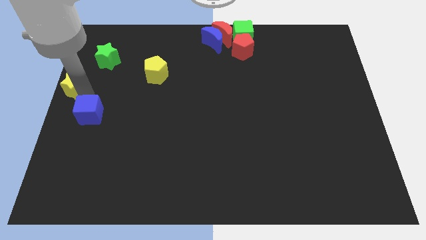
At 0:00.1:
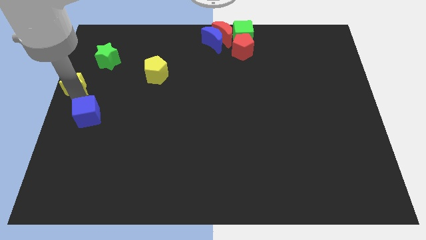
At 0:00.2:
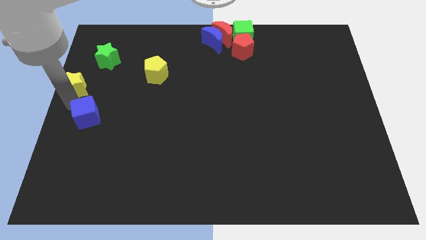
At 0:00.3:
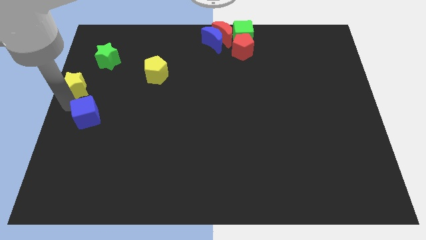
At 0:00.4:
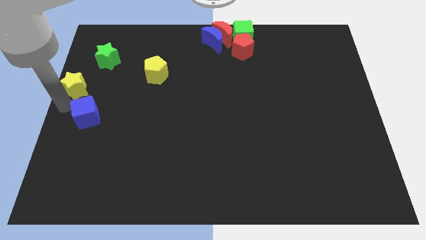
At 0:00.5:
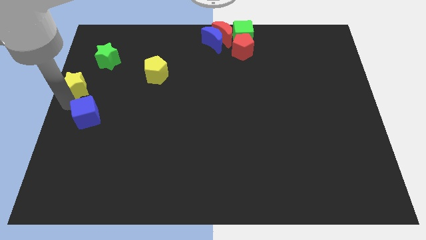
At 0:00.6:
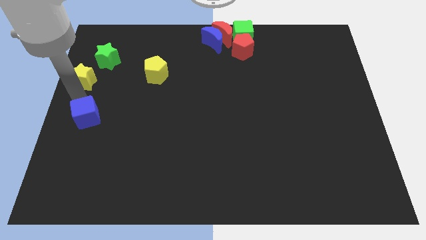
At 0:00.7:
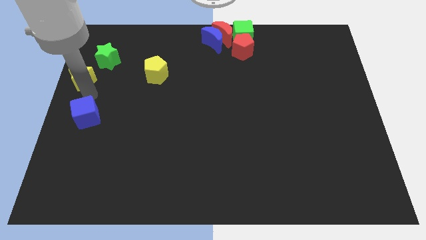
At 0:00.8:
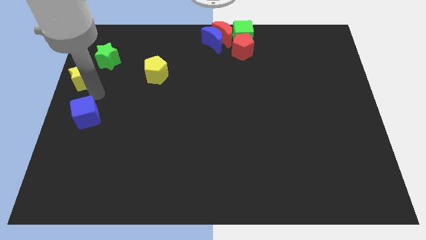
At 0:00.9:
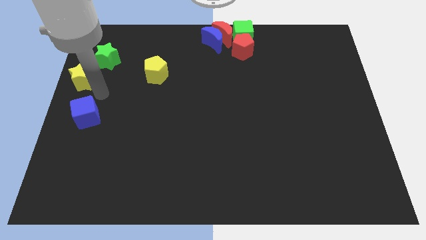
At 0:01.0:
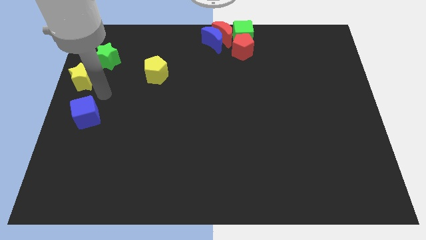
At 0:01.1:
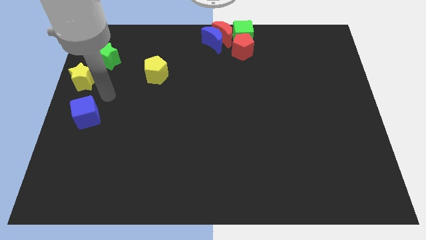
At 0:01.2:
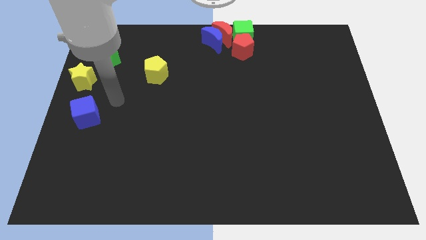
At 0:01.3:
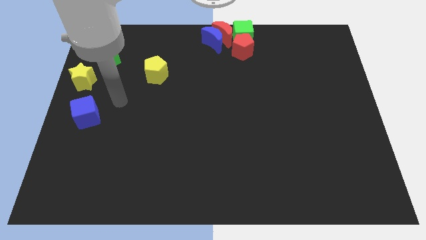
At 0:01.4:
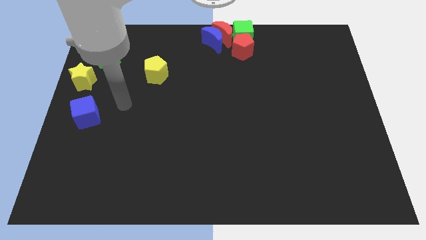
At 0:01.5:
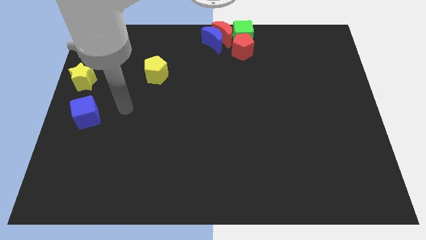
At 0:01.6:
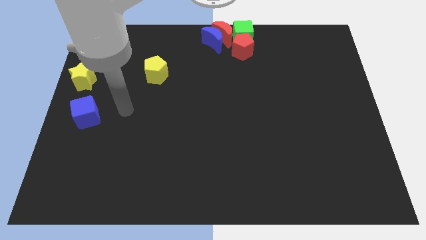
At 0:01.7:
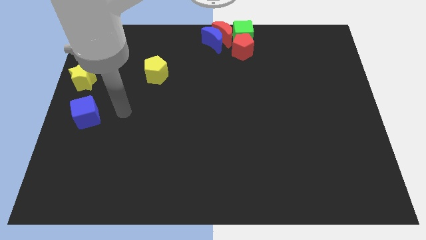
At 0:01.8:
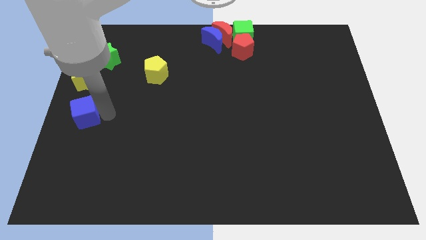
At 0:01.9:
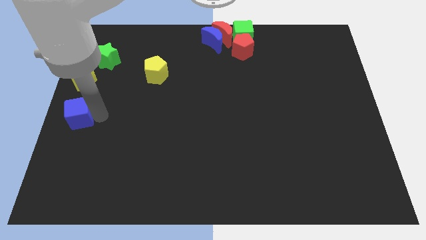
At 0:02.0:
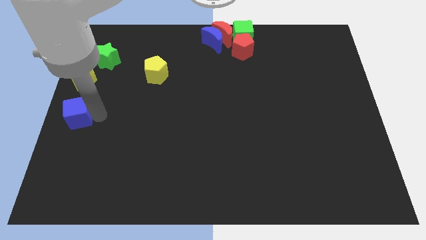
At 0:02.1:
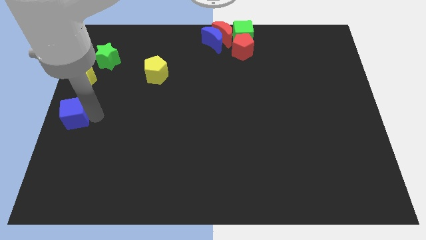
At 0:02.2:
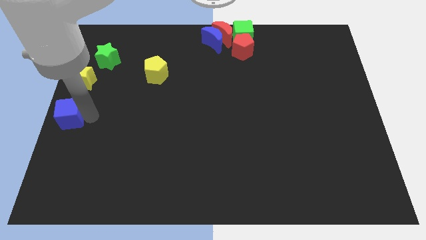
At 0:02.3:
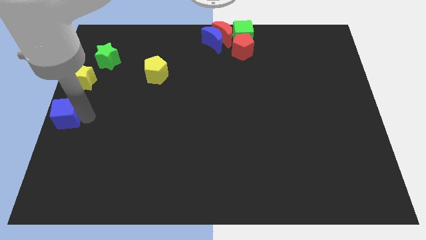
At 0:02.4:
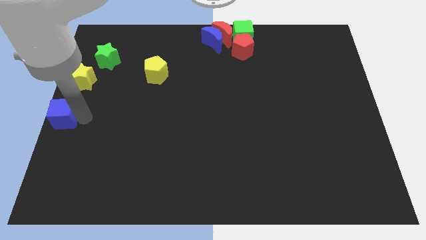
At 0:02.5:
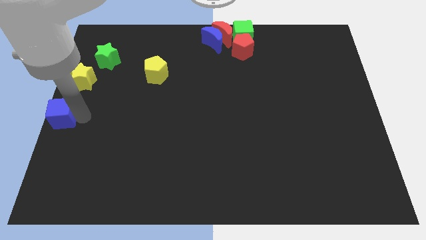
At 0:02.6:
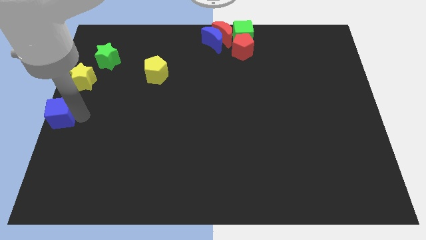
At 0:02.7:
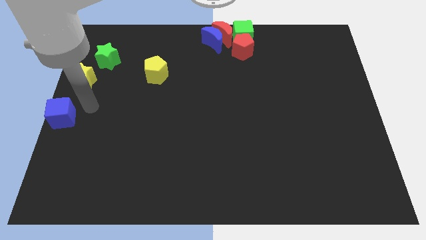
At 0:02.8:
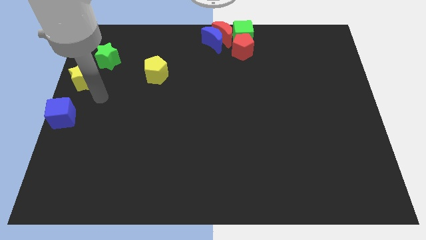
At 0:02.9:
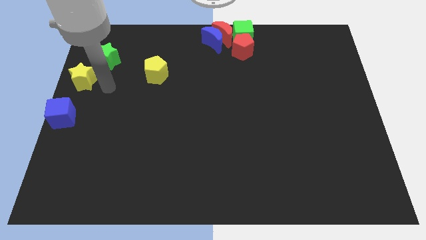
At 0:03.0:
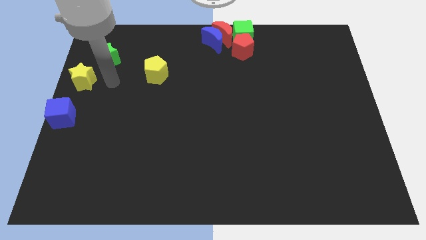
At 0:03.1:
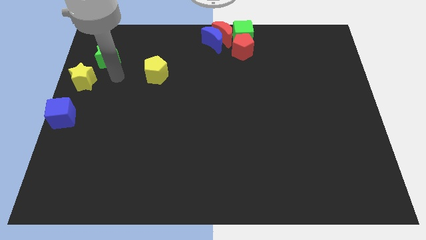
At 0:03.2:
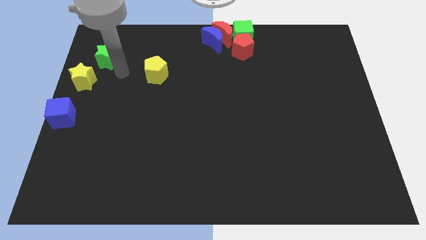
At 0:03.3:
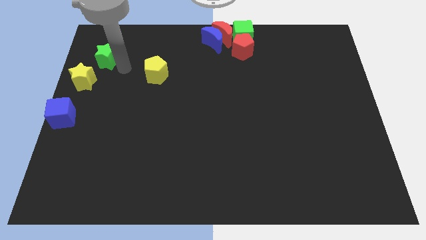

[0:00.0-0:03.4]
place the blue cube to the left center of the board

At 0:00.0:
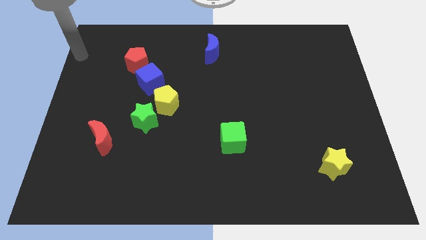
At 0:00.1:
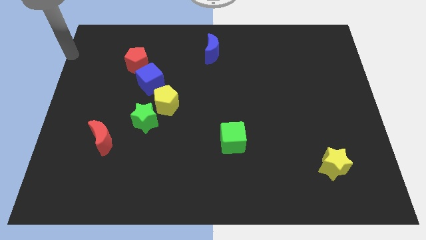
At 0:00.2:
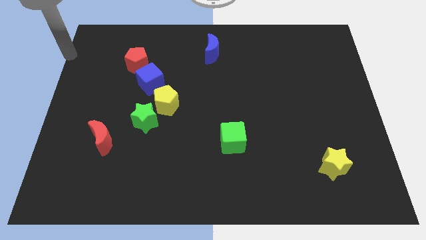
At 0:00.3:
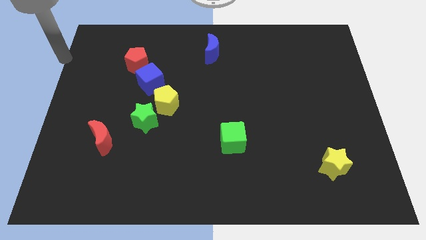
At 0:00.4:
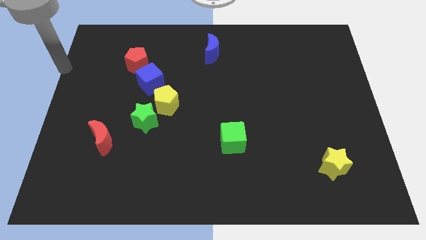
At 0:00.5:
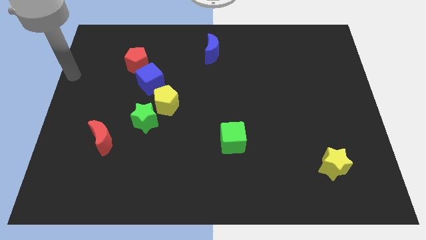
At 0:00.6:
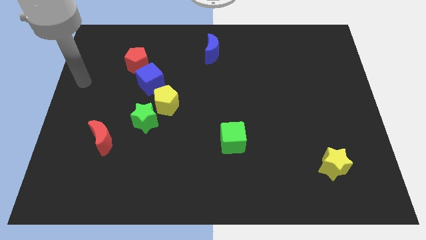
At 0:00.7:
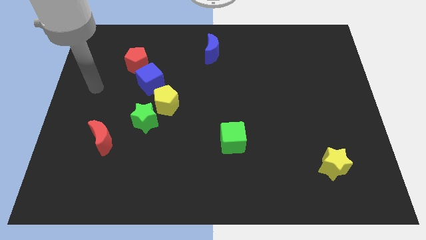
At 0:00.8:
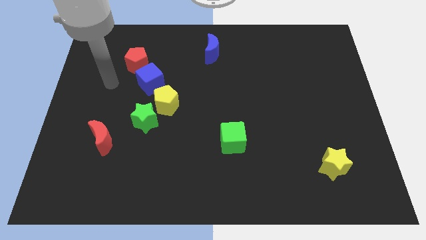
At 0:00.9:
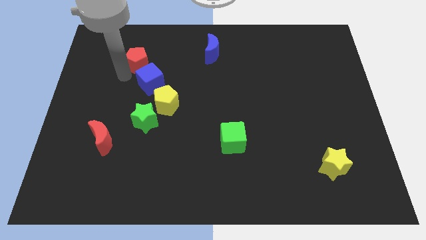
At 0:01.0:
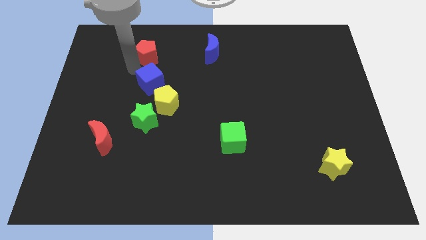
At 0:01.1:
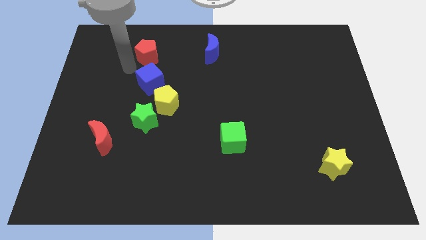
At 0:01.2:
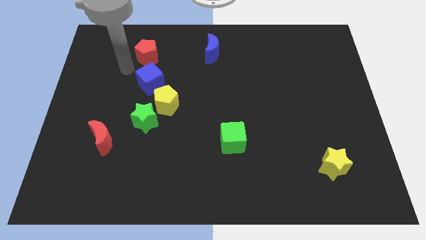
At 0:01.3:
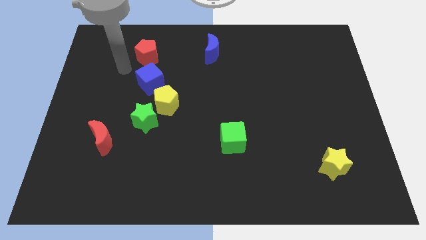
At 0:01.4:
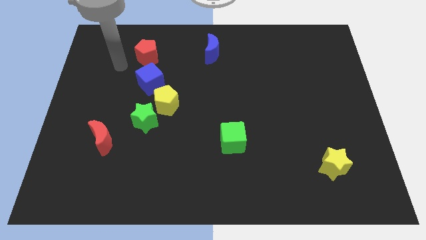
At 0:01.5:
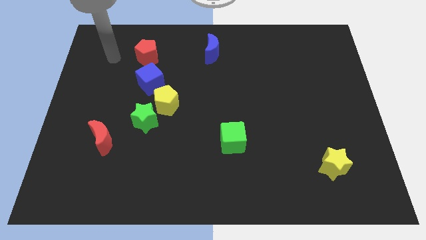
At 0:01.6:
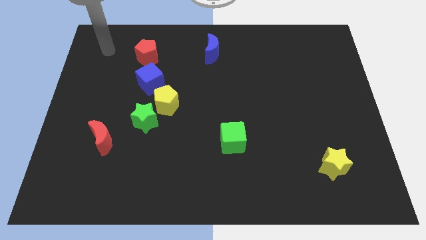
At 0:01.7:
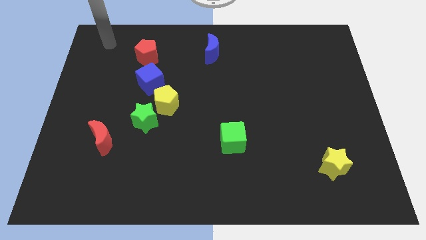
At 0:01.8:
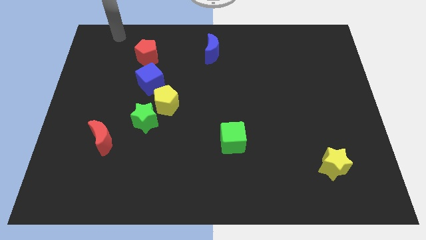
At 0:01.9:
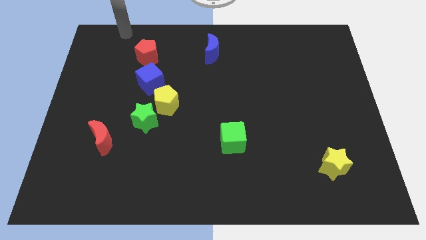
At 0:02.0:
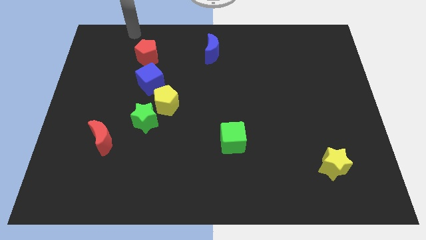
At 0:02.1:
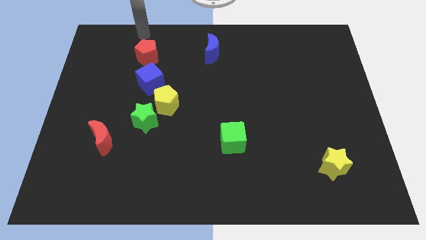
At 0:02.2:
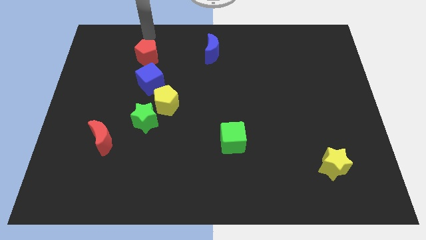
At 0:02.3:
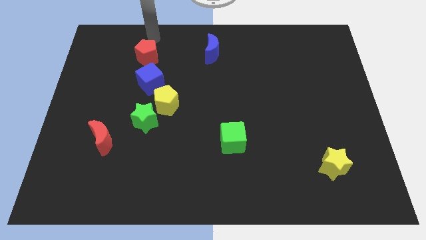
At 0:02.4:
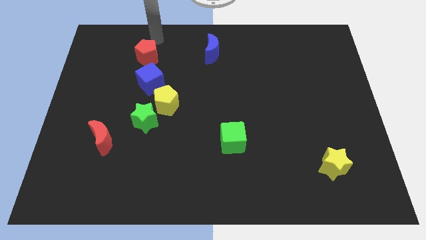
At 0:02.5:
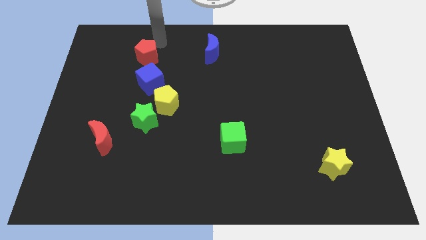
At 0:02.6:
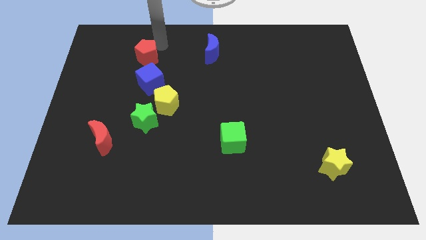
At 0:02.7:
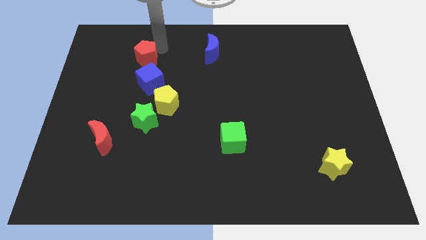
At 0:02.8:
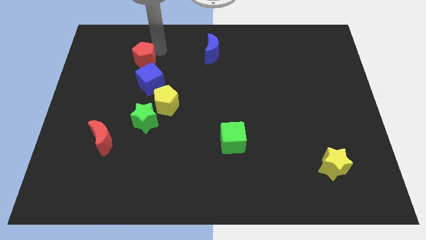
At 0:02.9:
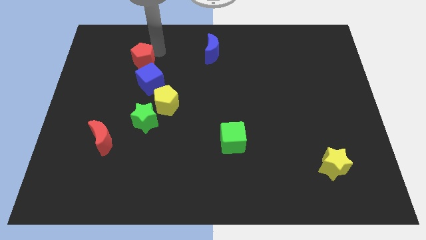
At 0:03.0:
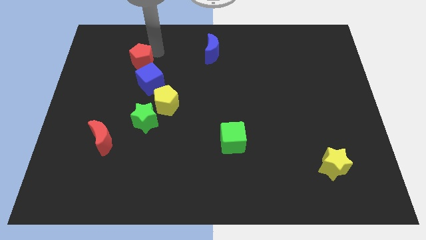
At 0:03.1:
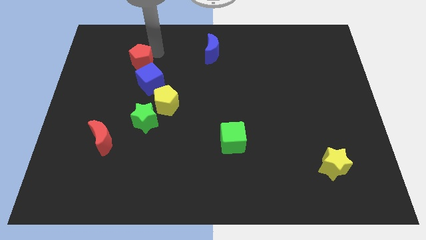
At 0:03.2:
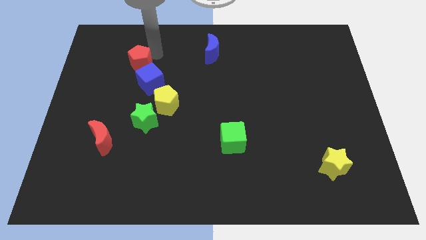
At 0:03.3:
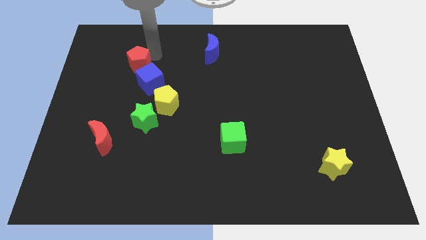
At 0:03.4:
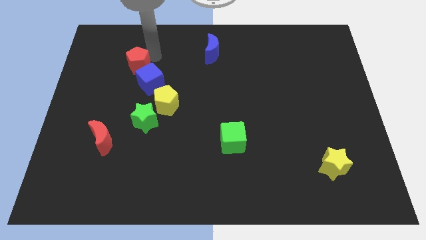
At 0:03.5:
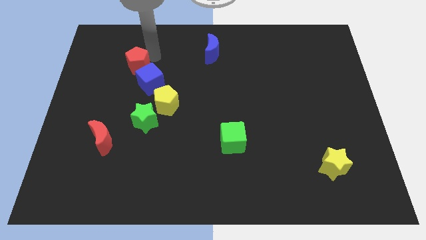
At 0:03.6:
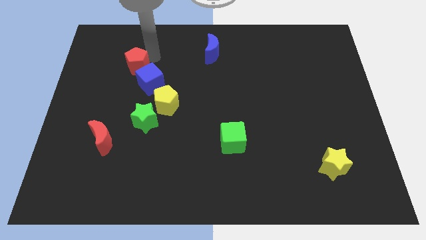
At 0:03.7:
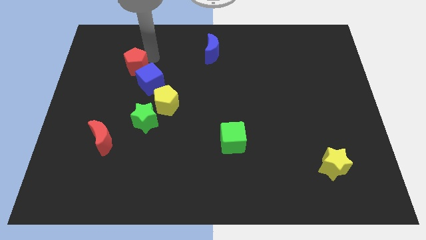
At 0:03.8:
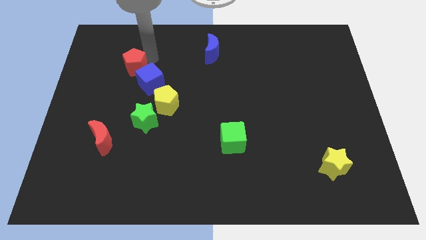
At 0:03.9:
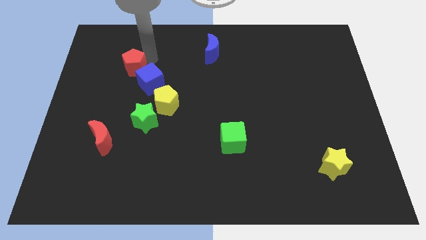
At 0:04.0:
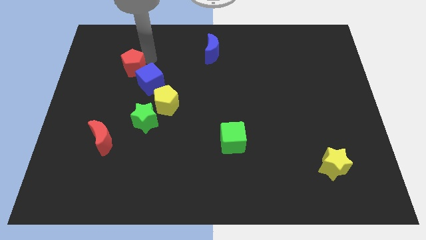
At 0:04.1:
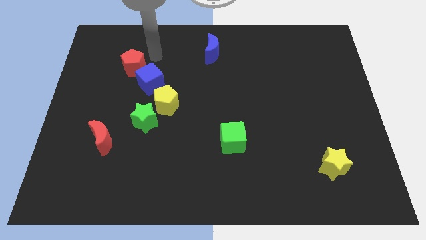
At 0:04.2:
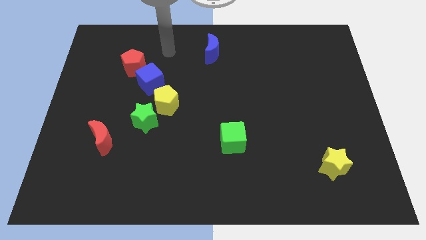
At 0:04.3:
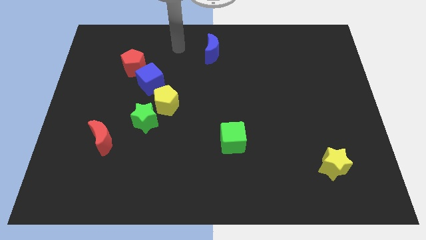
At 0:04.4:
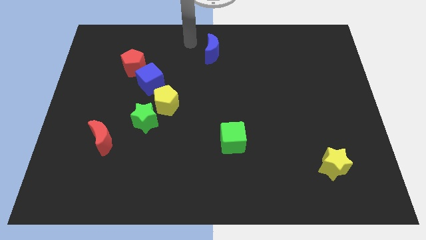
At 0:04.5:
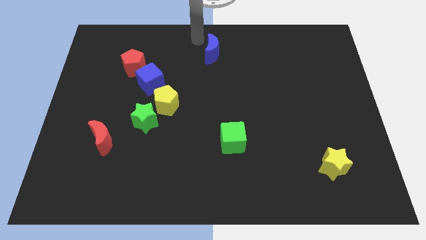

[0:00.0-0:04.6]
adjust the red pentagon near the blue cube

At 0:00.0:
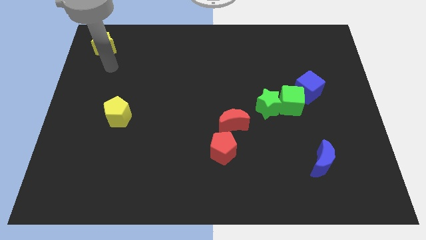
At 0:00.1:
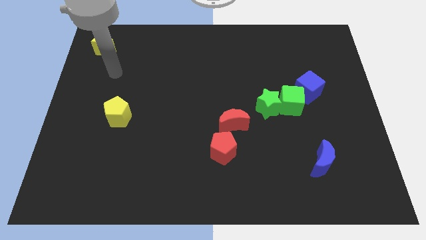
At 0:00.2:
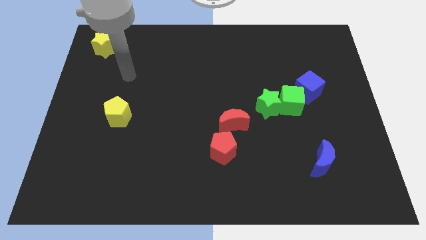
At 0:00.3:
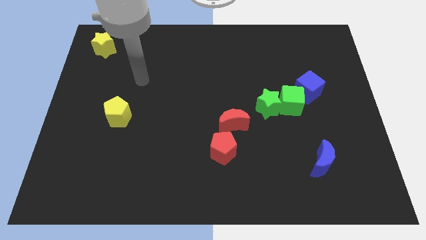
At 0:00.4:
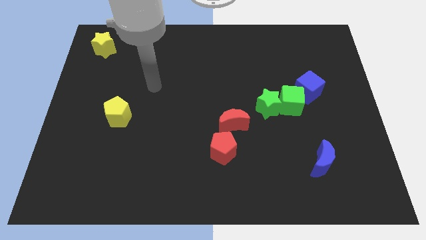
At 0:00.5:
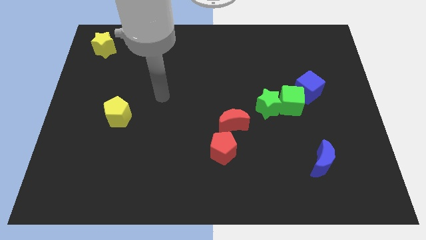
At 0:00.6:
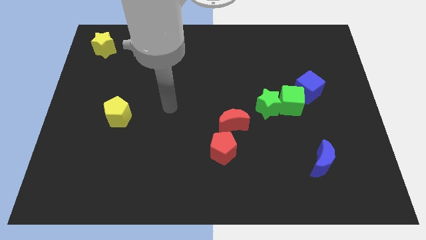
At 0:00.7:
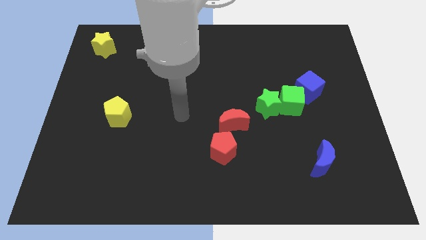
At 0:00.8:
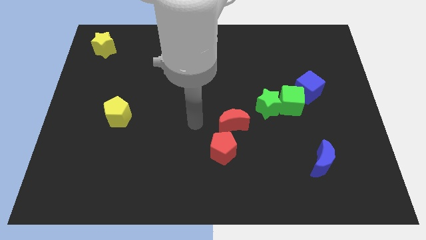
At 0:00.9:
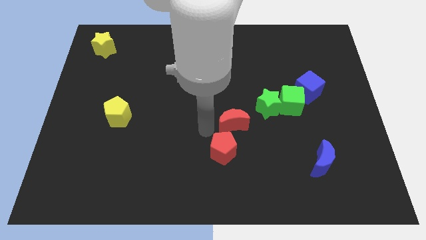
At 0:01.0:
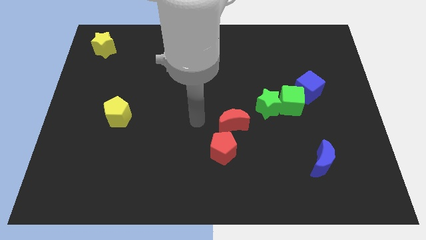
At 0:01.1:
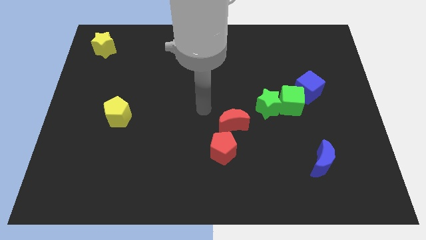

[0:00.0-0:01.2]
move your arm away from the yellow star
